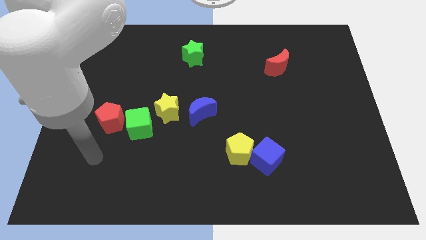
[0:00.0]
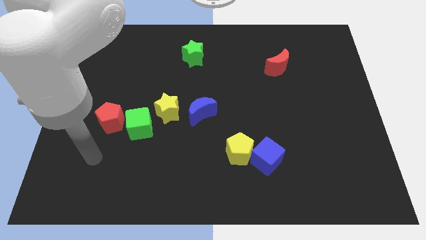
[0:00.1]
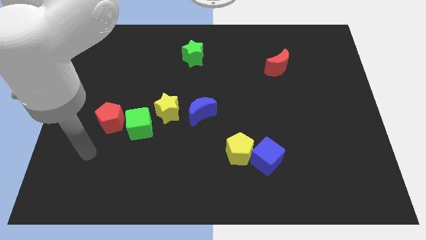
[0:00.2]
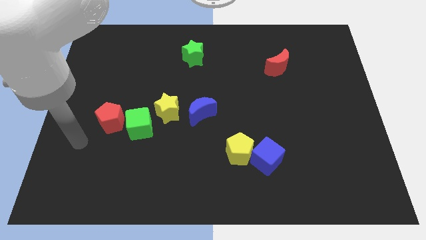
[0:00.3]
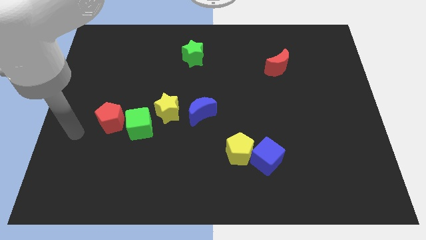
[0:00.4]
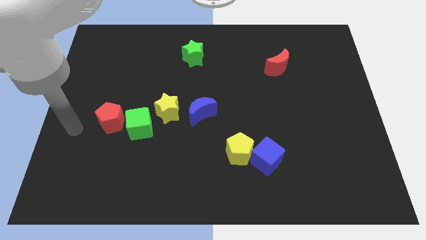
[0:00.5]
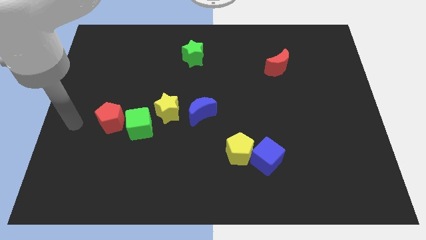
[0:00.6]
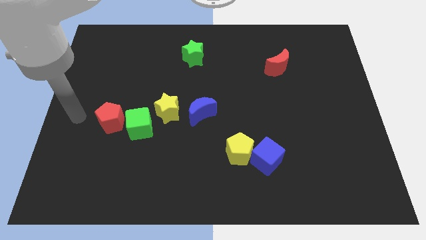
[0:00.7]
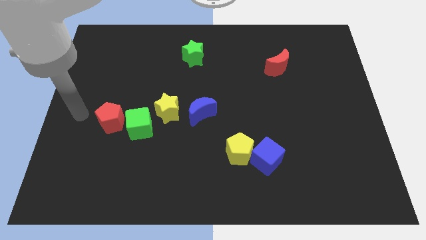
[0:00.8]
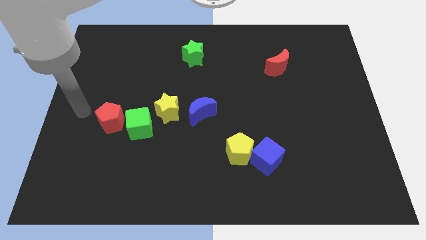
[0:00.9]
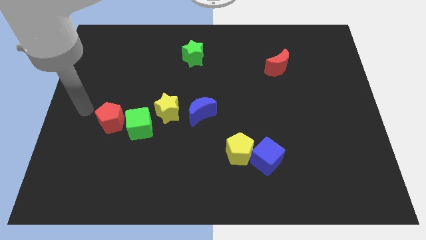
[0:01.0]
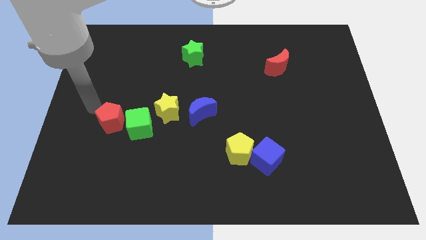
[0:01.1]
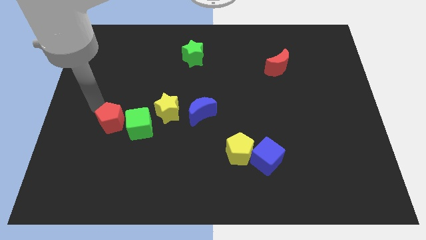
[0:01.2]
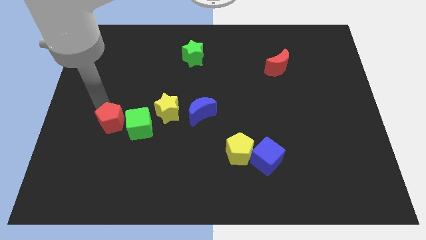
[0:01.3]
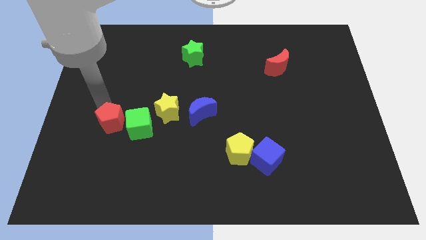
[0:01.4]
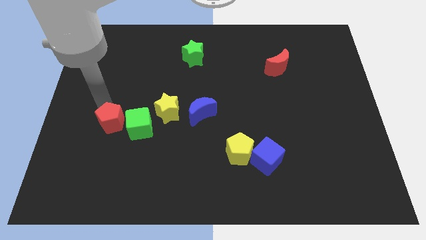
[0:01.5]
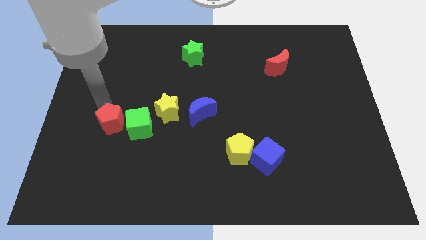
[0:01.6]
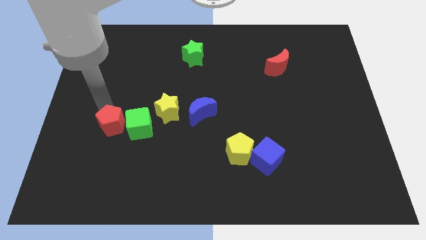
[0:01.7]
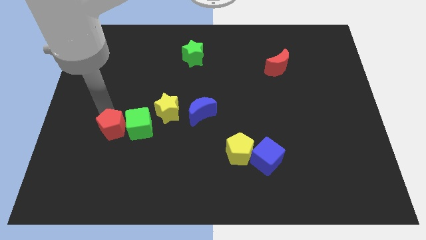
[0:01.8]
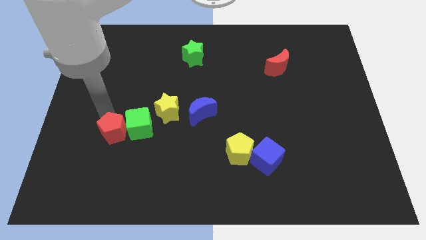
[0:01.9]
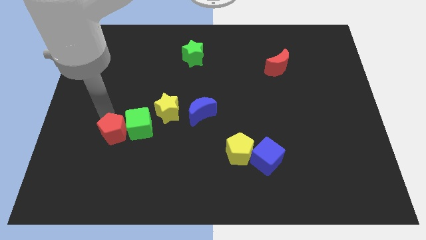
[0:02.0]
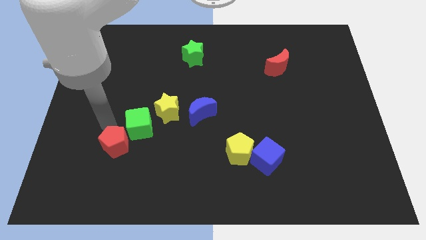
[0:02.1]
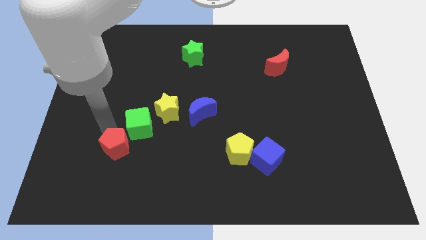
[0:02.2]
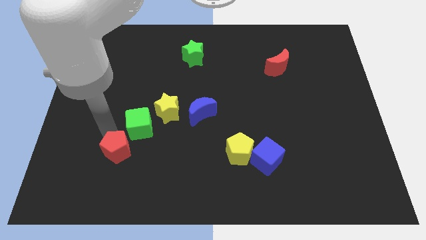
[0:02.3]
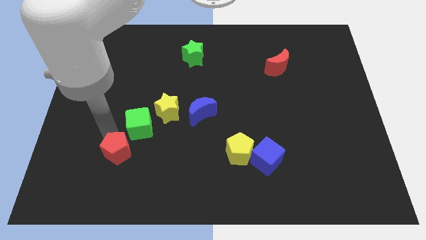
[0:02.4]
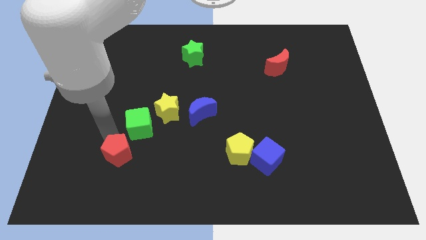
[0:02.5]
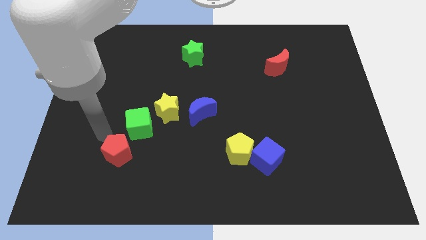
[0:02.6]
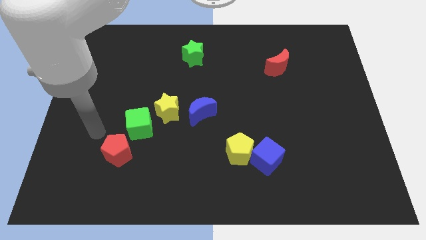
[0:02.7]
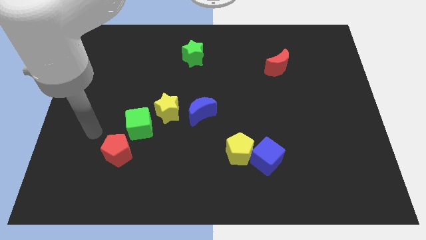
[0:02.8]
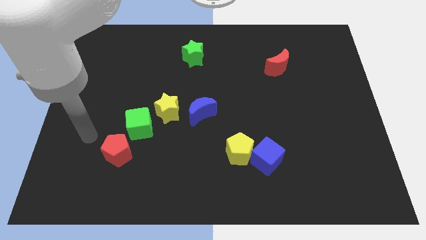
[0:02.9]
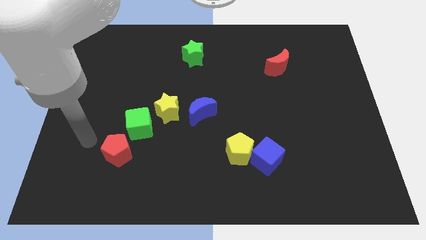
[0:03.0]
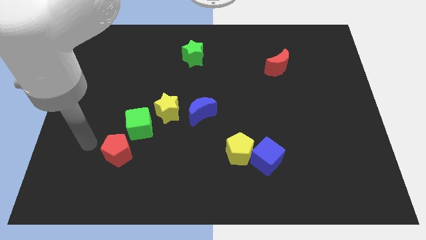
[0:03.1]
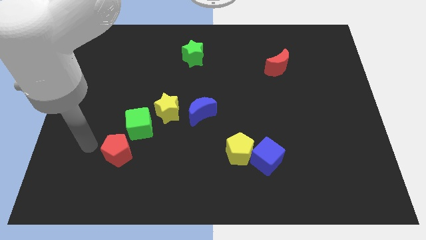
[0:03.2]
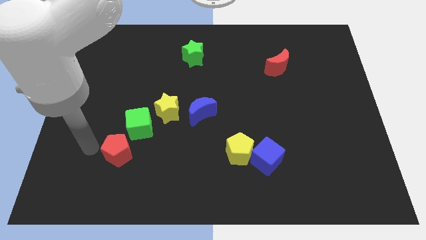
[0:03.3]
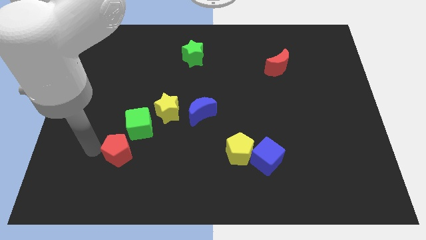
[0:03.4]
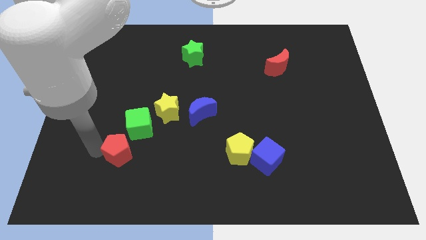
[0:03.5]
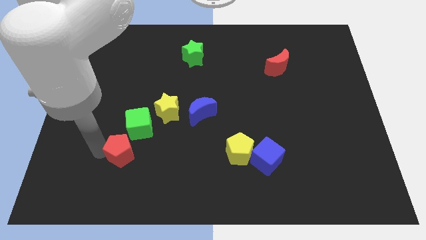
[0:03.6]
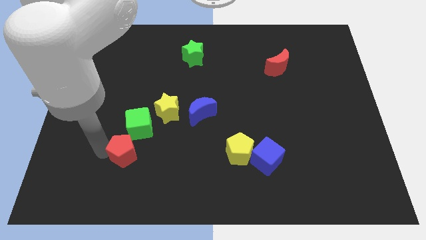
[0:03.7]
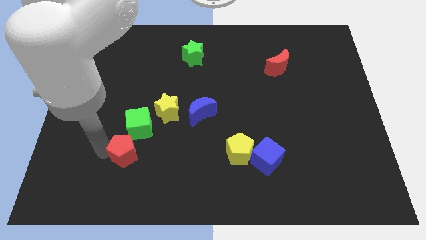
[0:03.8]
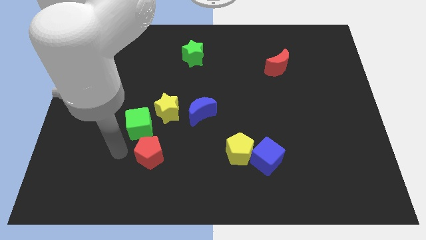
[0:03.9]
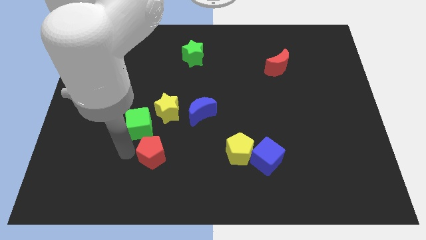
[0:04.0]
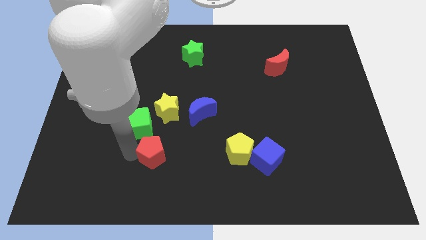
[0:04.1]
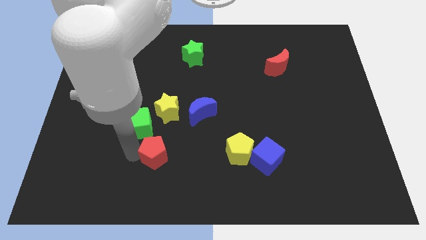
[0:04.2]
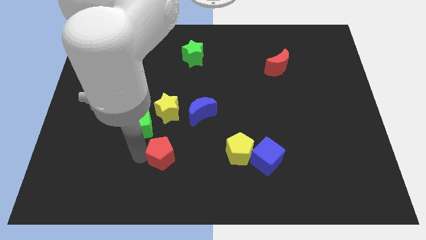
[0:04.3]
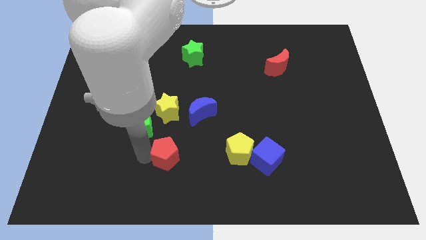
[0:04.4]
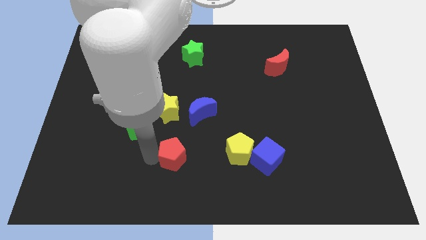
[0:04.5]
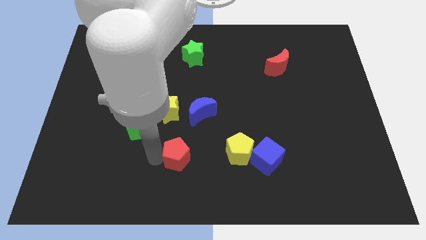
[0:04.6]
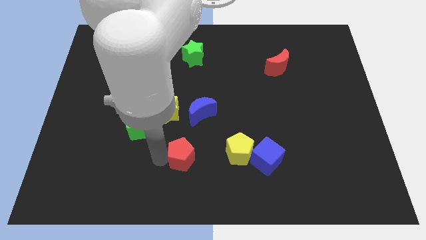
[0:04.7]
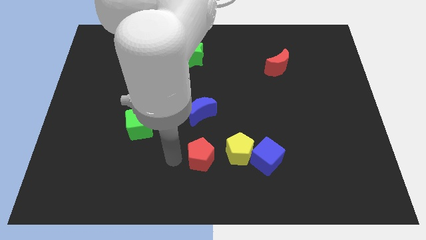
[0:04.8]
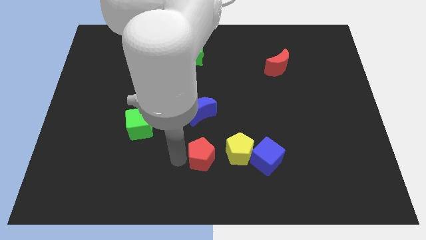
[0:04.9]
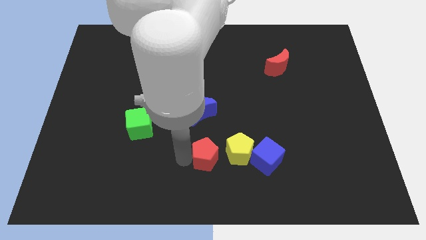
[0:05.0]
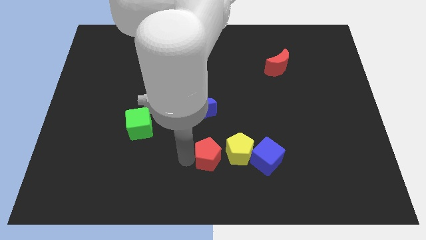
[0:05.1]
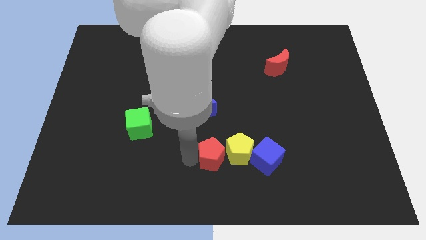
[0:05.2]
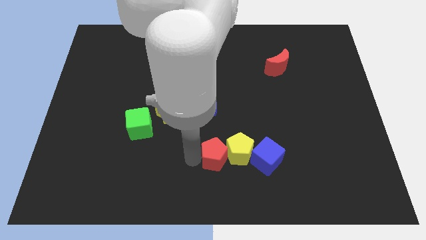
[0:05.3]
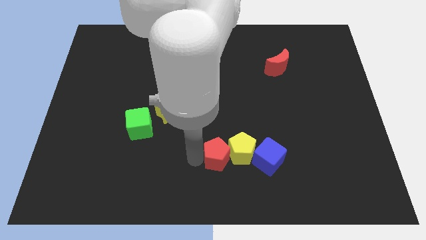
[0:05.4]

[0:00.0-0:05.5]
push the red pentagon to the yellow pentagon

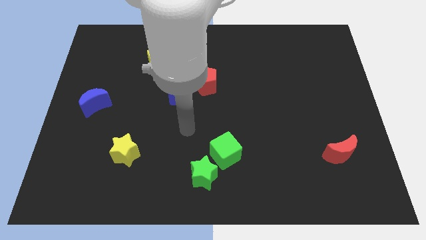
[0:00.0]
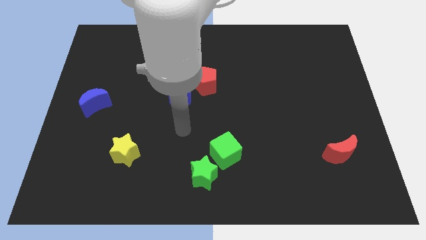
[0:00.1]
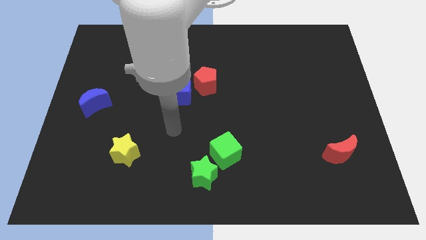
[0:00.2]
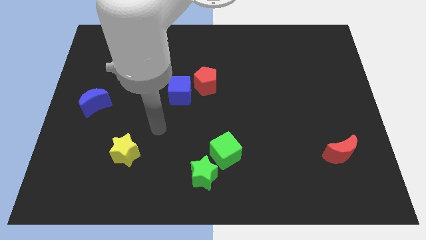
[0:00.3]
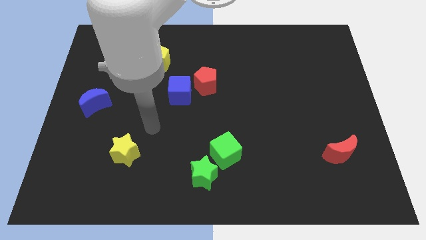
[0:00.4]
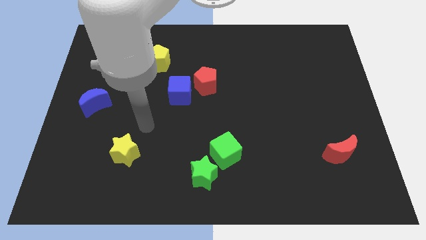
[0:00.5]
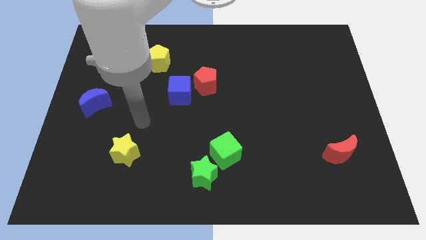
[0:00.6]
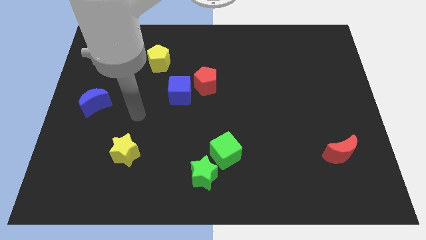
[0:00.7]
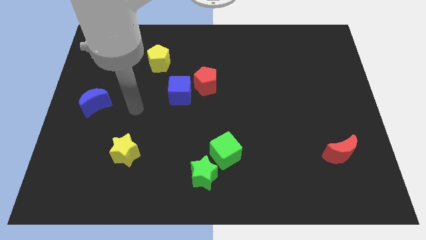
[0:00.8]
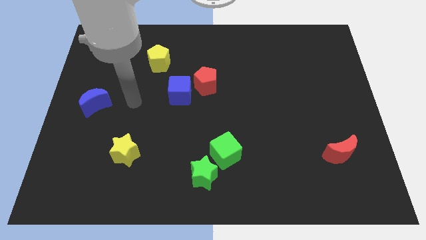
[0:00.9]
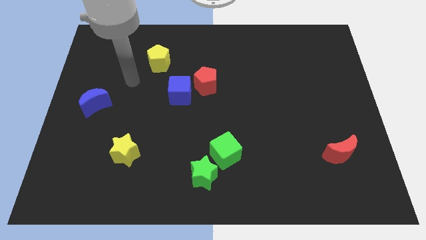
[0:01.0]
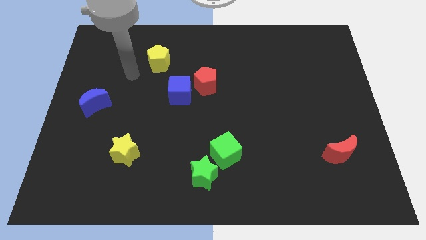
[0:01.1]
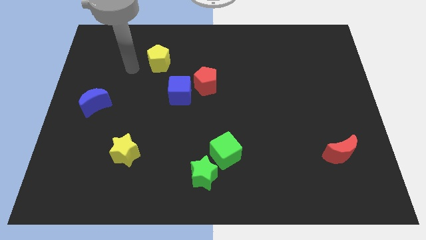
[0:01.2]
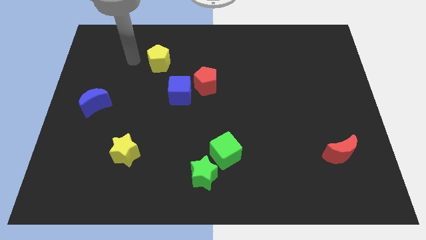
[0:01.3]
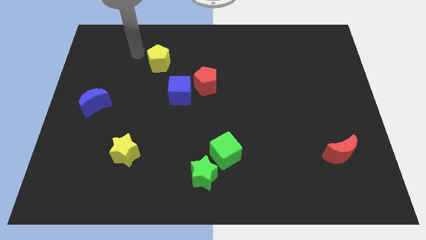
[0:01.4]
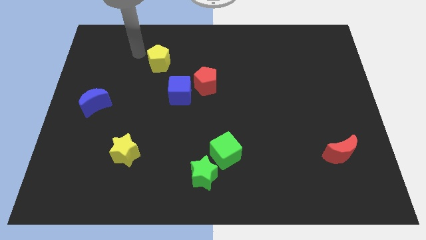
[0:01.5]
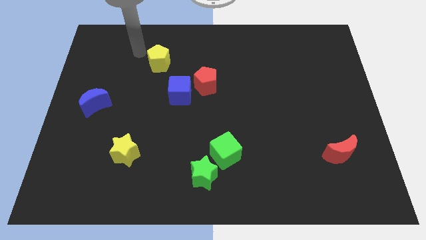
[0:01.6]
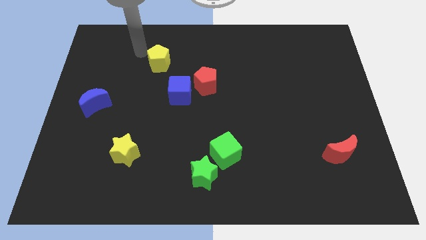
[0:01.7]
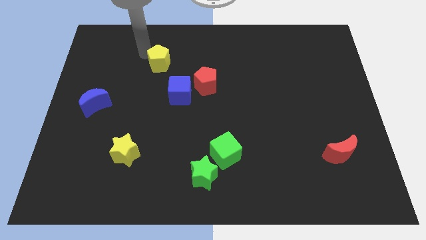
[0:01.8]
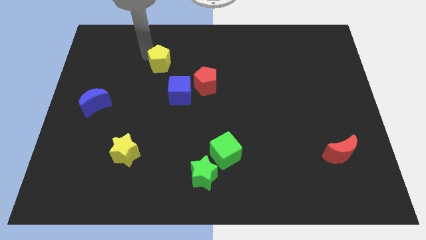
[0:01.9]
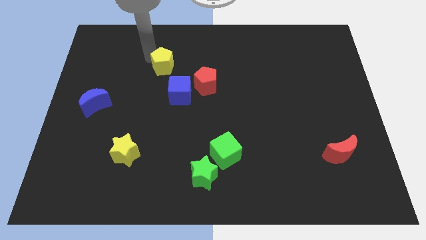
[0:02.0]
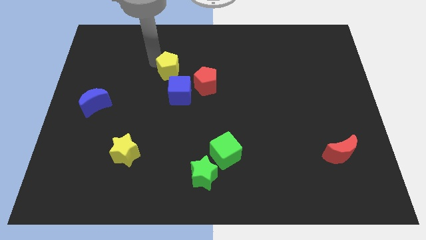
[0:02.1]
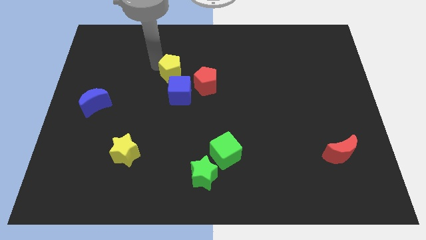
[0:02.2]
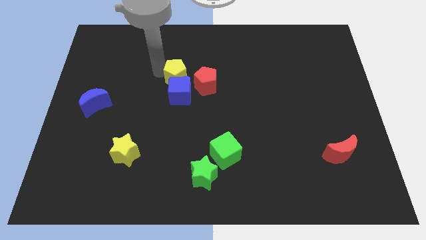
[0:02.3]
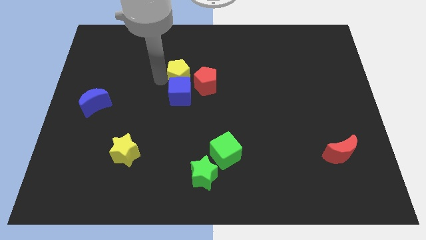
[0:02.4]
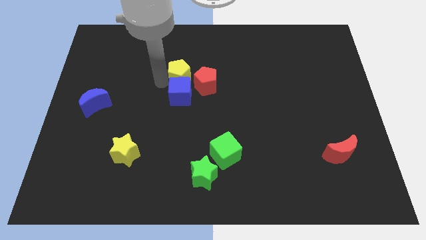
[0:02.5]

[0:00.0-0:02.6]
put the yellow pentagon to the blue cube

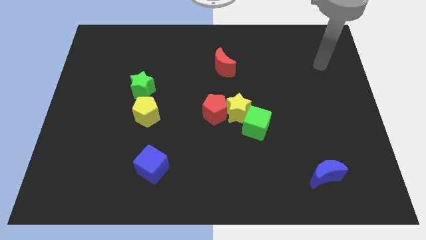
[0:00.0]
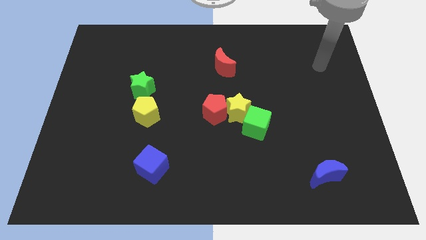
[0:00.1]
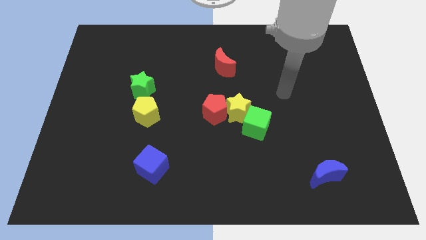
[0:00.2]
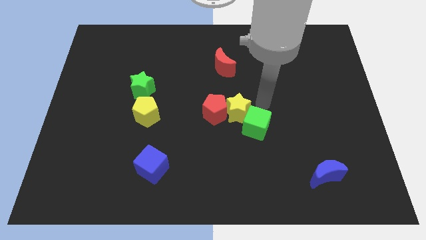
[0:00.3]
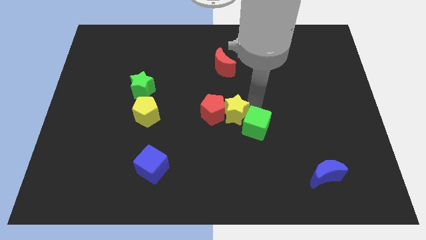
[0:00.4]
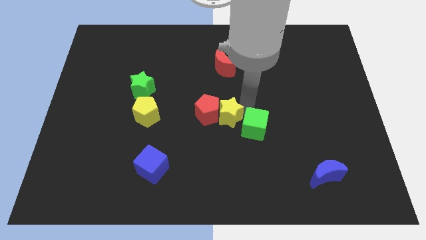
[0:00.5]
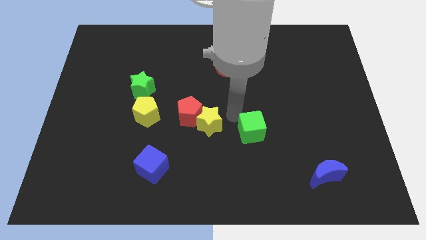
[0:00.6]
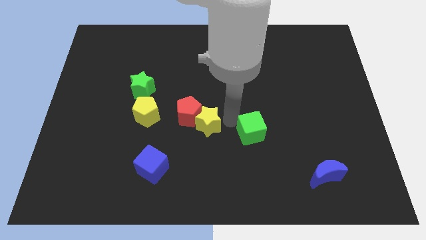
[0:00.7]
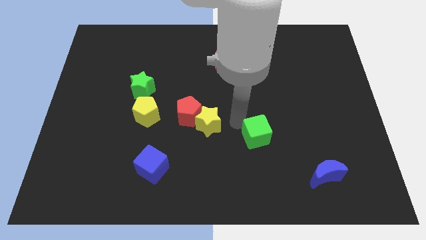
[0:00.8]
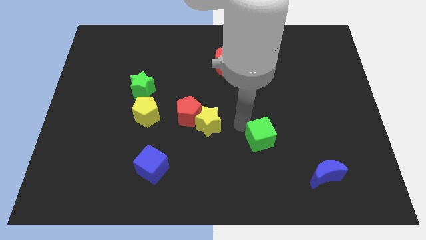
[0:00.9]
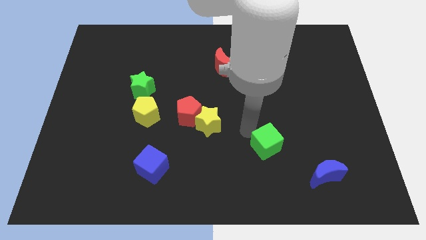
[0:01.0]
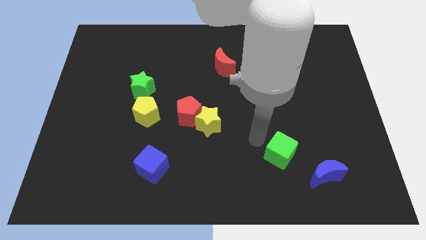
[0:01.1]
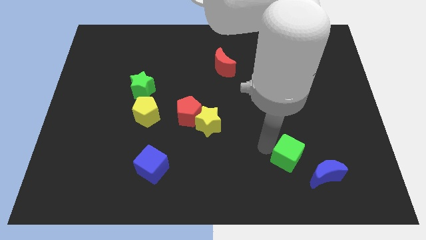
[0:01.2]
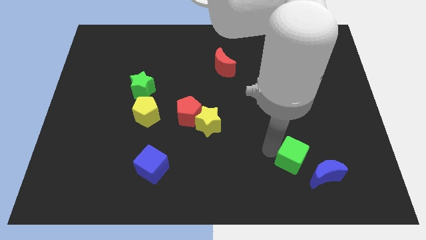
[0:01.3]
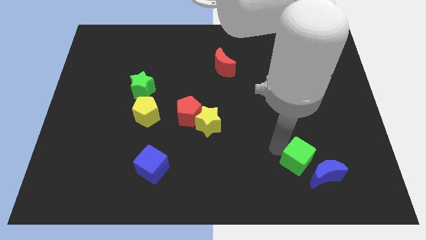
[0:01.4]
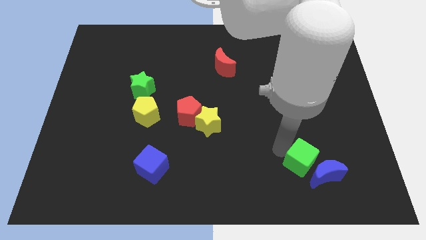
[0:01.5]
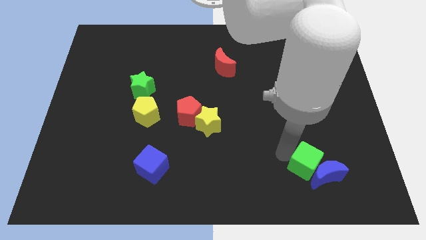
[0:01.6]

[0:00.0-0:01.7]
slide the green cube next to the blue moon
